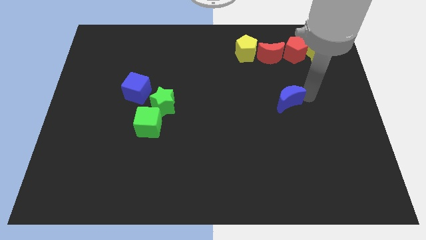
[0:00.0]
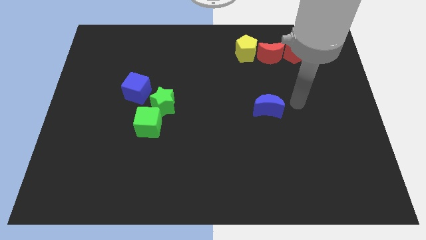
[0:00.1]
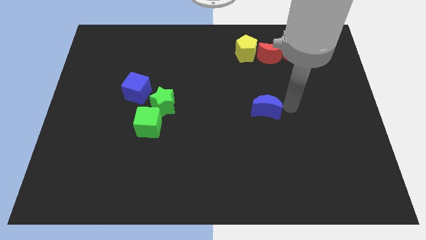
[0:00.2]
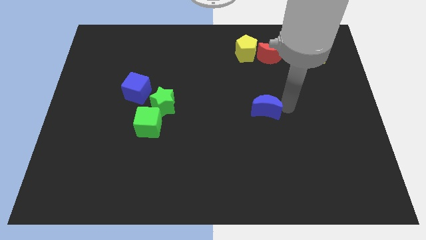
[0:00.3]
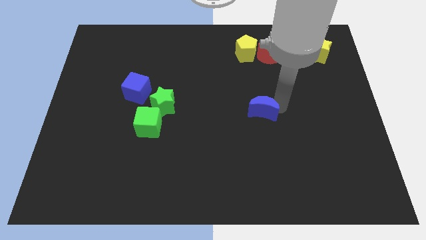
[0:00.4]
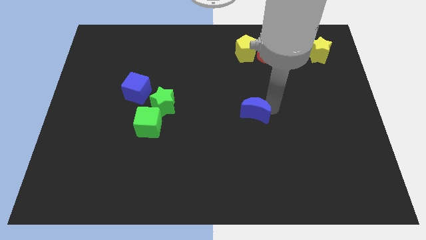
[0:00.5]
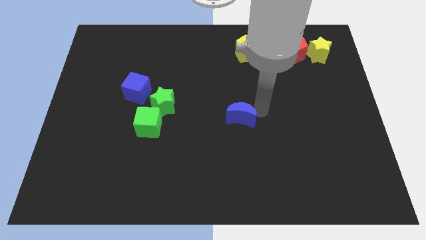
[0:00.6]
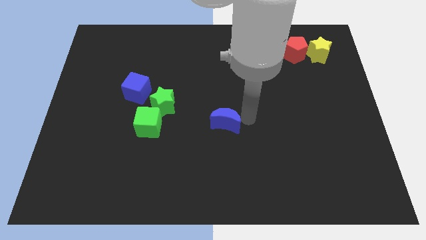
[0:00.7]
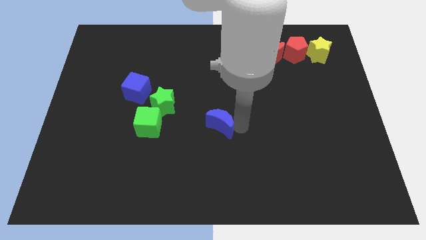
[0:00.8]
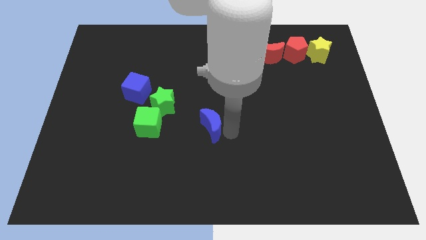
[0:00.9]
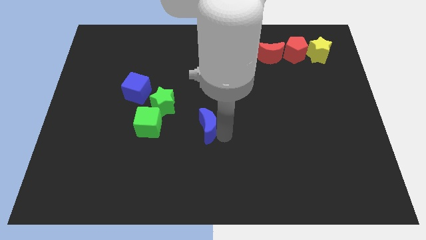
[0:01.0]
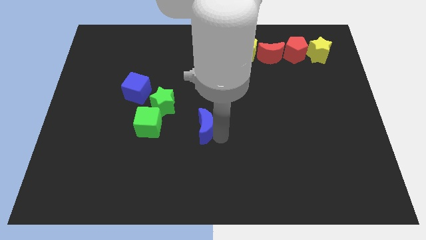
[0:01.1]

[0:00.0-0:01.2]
push the blue crescent to the center of the board

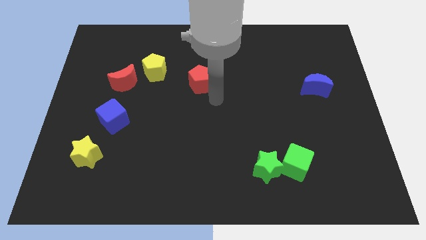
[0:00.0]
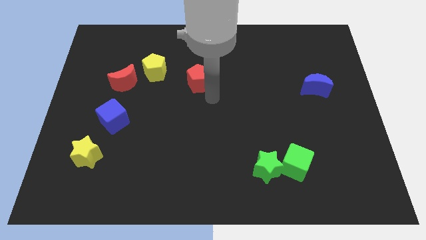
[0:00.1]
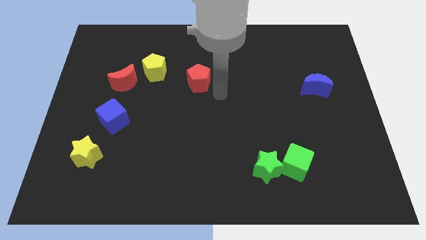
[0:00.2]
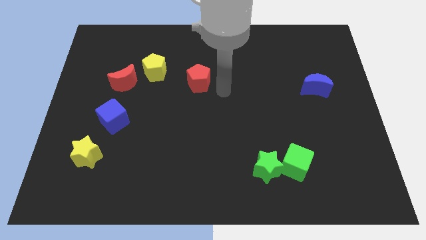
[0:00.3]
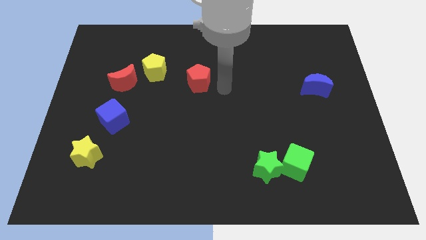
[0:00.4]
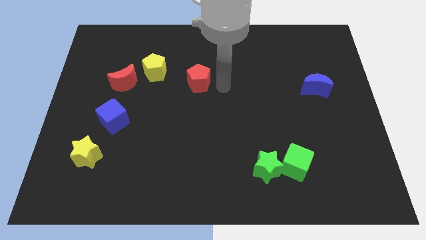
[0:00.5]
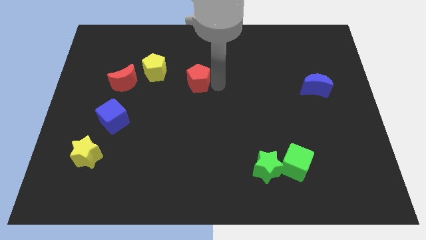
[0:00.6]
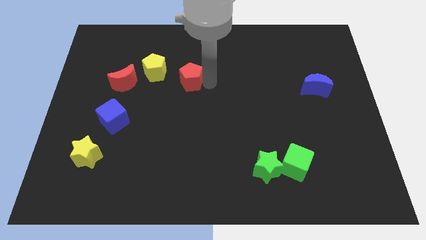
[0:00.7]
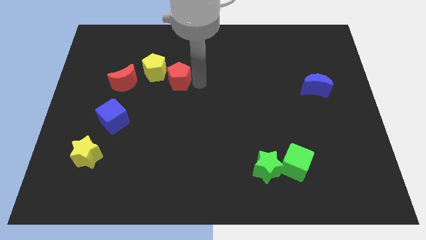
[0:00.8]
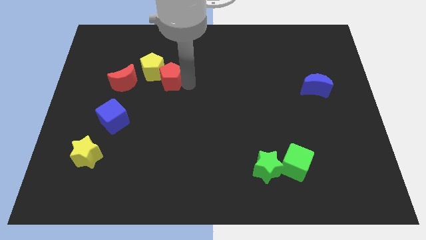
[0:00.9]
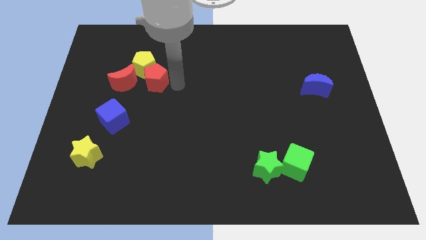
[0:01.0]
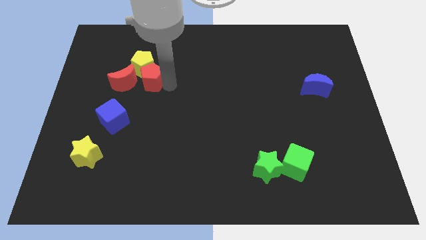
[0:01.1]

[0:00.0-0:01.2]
push red pentagon in to yellow pentagon

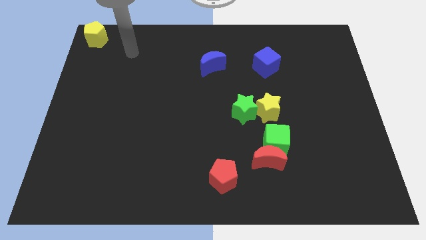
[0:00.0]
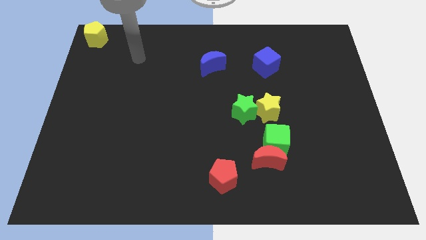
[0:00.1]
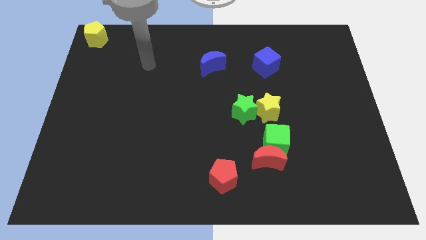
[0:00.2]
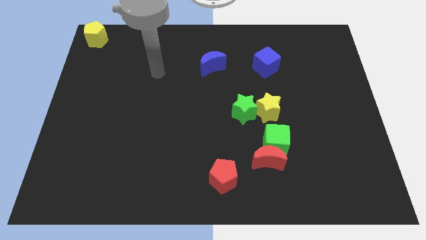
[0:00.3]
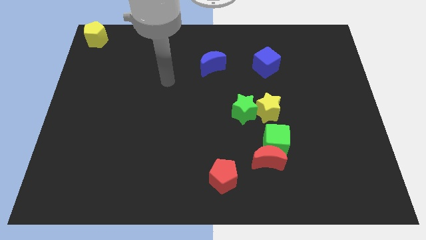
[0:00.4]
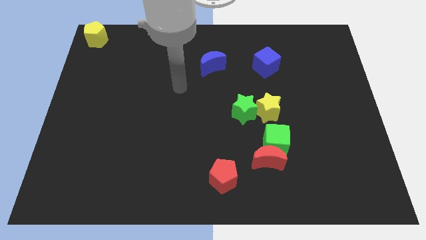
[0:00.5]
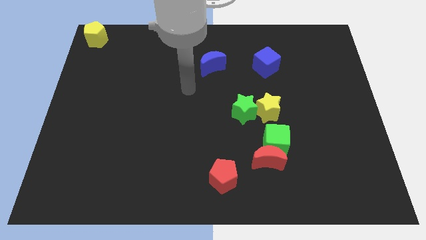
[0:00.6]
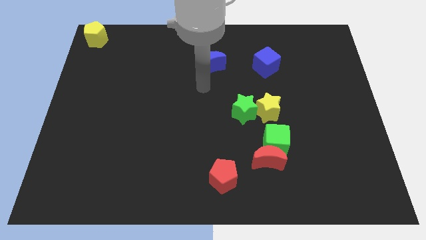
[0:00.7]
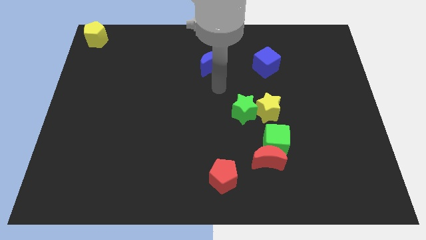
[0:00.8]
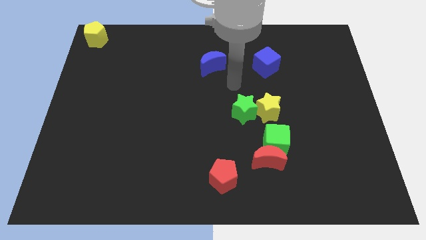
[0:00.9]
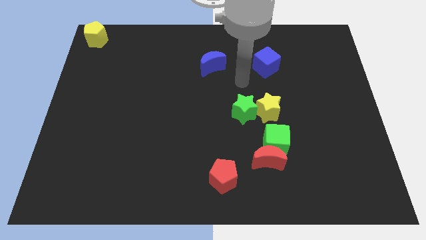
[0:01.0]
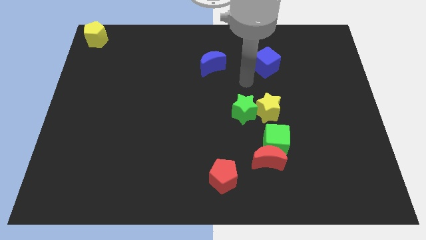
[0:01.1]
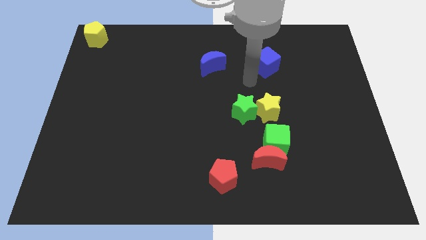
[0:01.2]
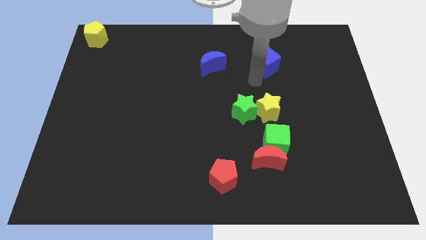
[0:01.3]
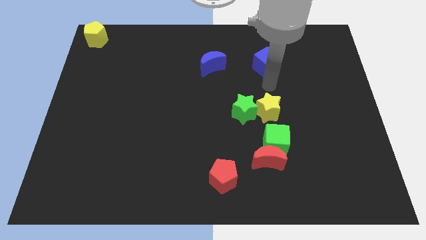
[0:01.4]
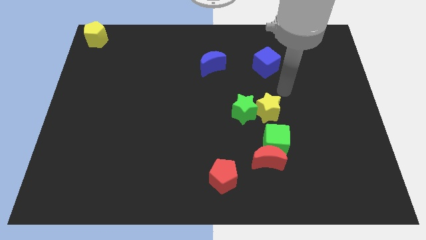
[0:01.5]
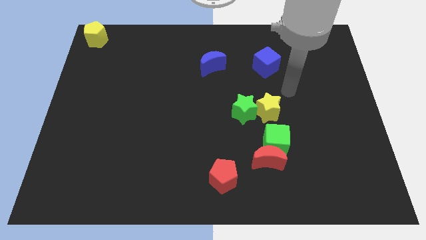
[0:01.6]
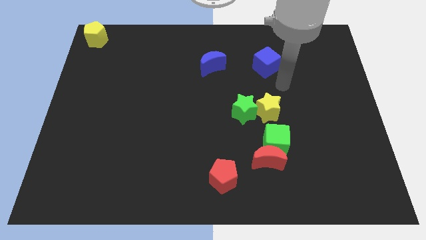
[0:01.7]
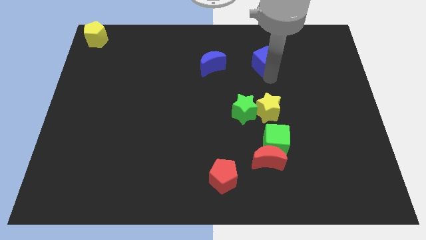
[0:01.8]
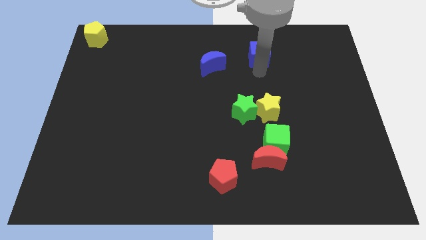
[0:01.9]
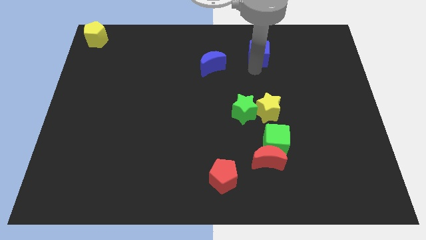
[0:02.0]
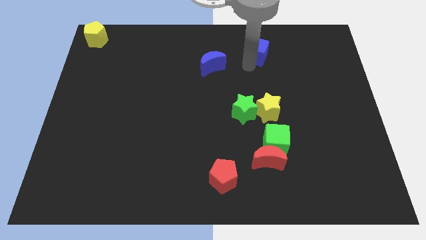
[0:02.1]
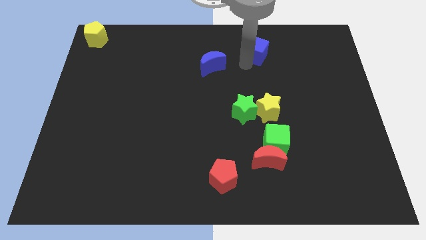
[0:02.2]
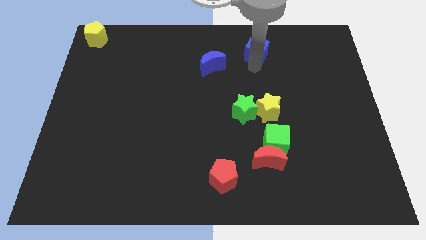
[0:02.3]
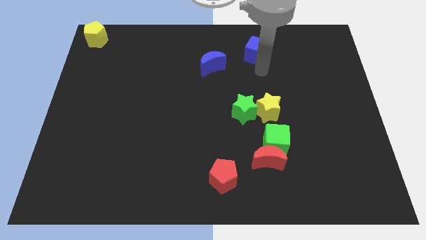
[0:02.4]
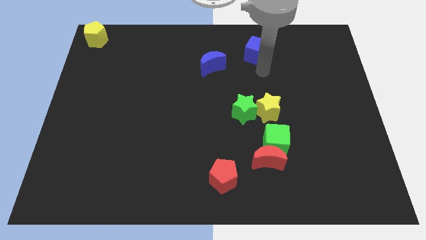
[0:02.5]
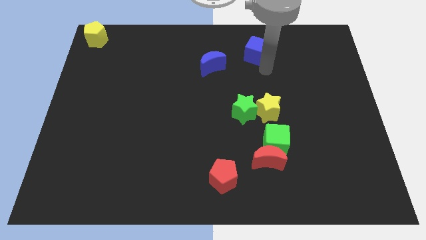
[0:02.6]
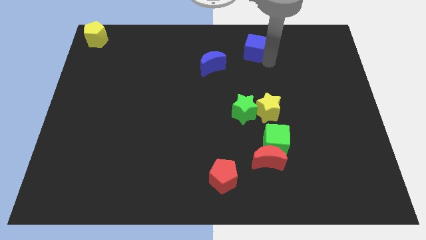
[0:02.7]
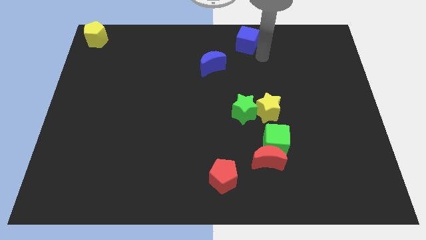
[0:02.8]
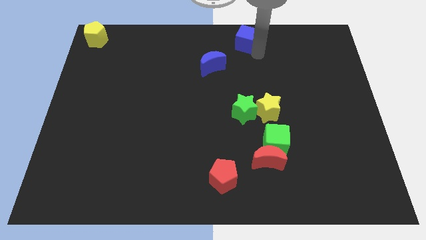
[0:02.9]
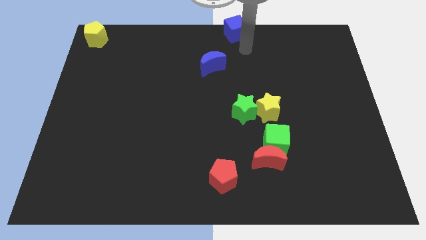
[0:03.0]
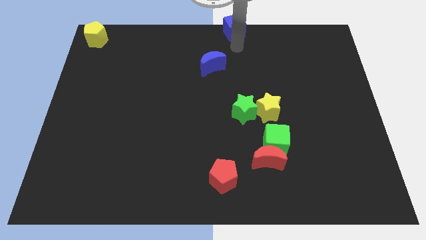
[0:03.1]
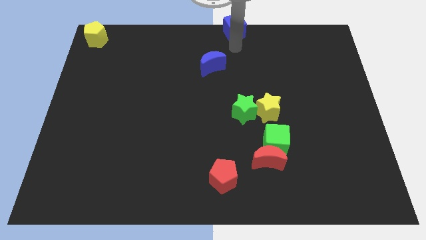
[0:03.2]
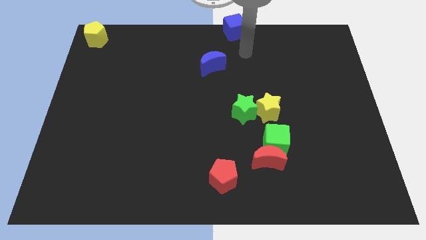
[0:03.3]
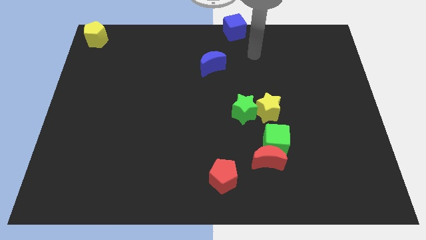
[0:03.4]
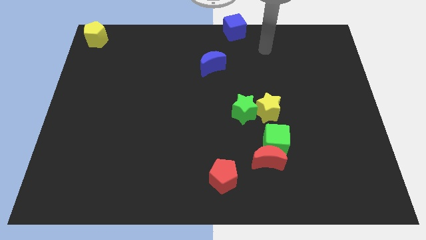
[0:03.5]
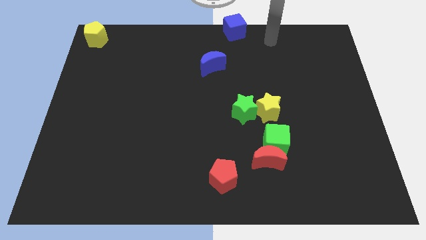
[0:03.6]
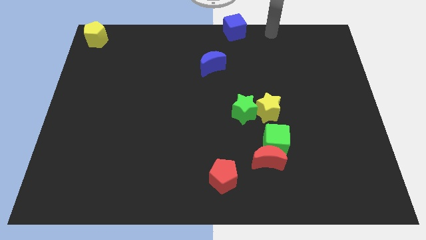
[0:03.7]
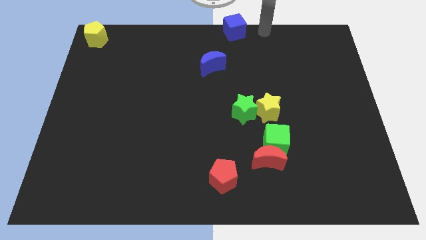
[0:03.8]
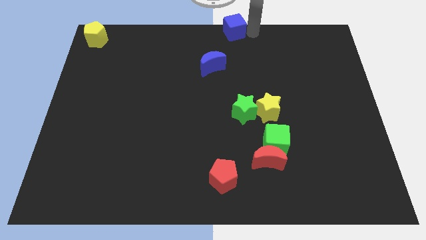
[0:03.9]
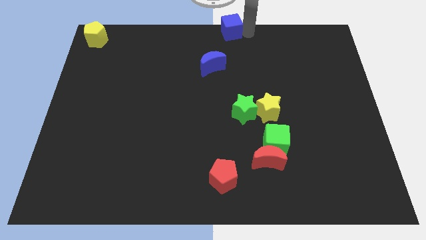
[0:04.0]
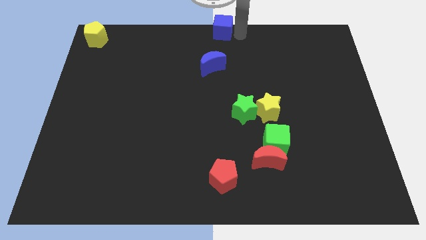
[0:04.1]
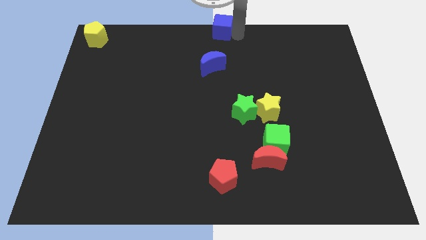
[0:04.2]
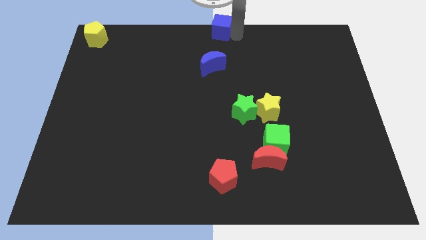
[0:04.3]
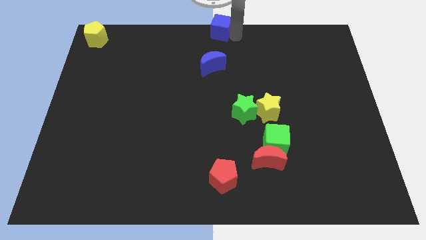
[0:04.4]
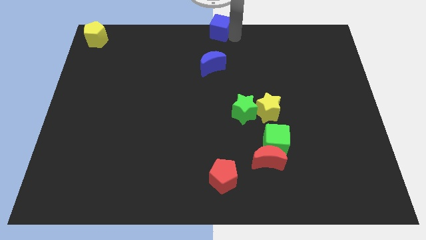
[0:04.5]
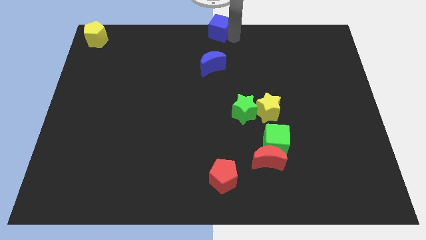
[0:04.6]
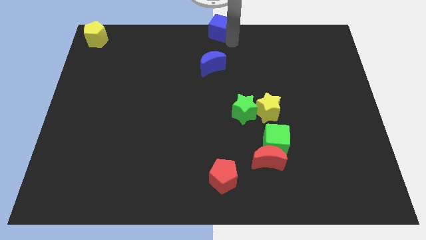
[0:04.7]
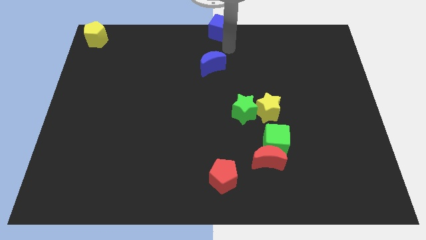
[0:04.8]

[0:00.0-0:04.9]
move the blue cube to the top center of the board

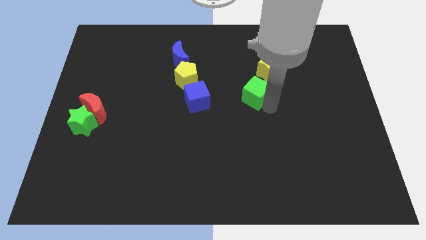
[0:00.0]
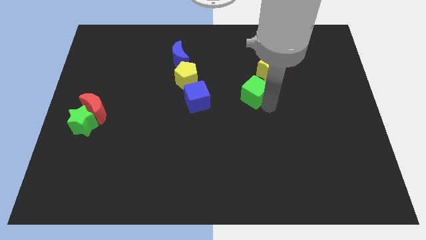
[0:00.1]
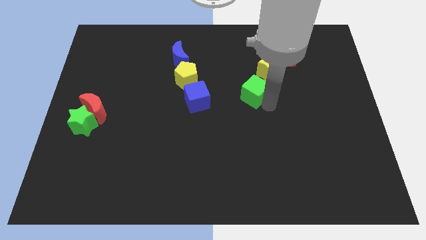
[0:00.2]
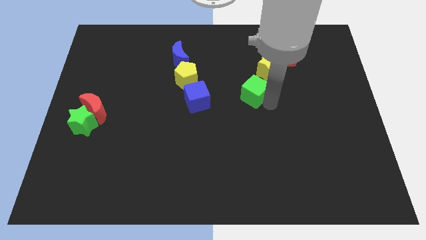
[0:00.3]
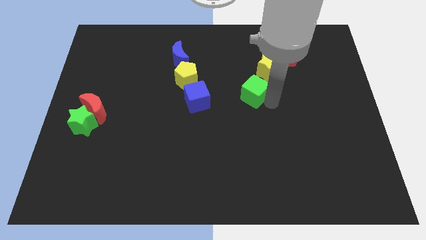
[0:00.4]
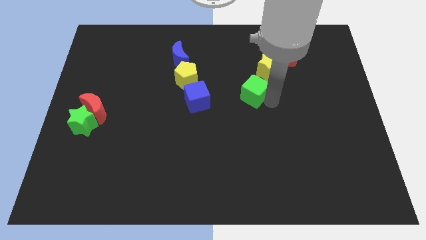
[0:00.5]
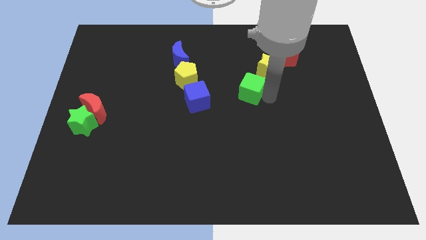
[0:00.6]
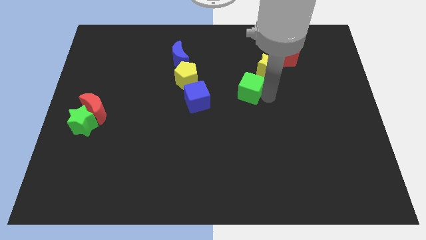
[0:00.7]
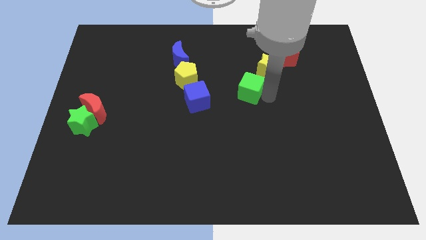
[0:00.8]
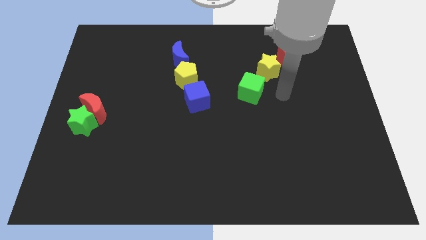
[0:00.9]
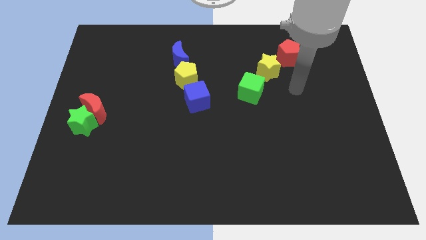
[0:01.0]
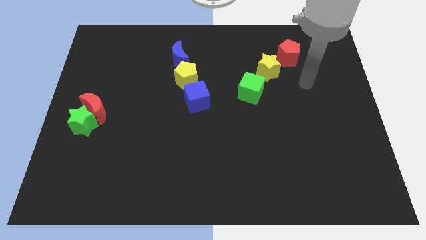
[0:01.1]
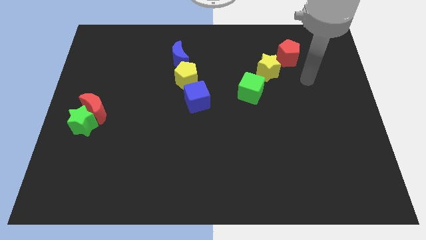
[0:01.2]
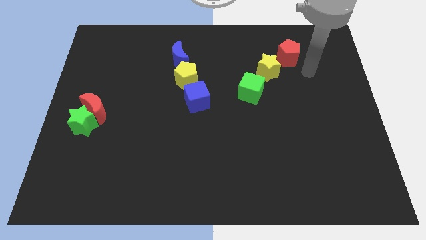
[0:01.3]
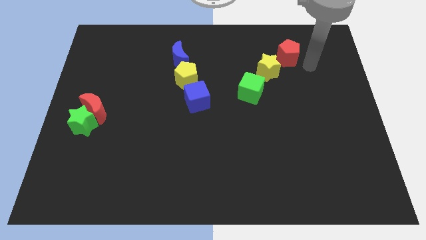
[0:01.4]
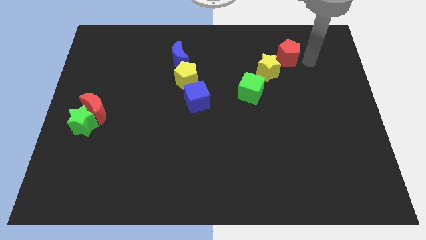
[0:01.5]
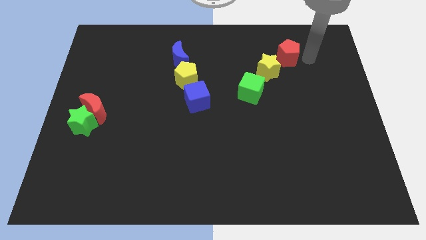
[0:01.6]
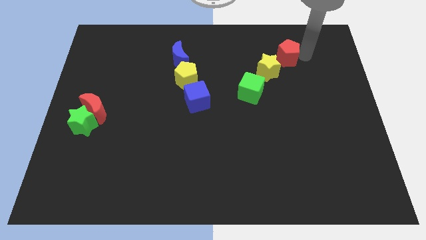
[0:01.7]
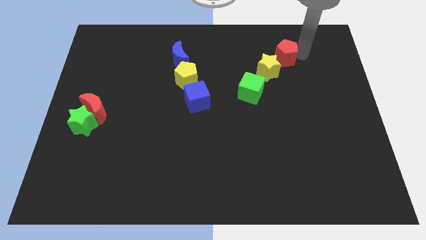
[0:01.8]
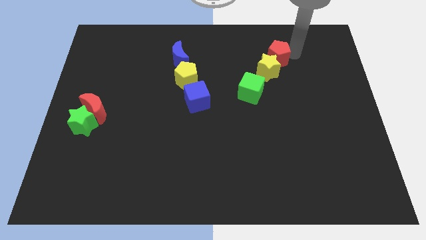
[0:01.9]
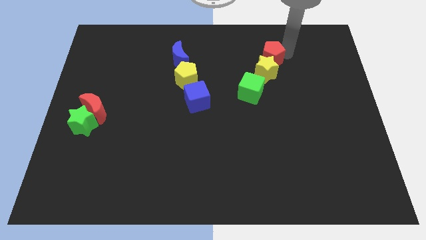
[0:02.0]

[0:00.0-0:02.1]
drag the red pentagon to top right of yellow star
